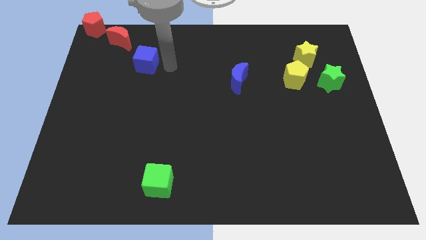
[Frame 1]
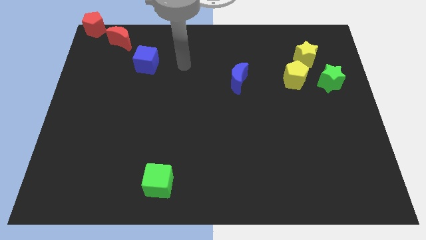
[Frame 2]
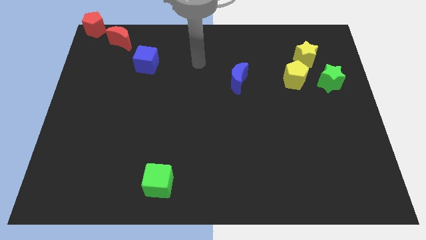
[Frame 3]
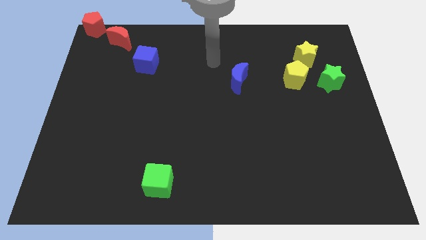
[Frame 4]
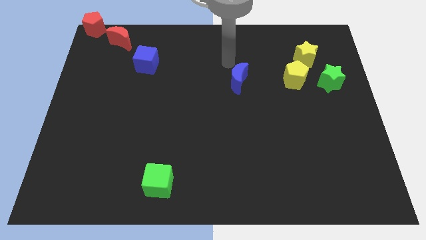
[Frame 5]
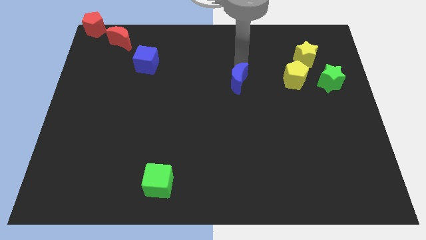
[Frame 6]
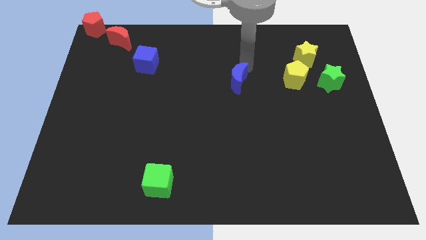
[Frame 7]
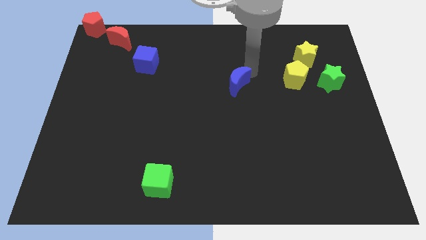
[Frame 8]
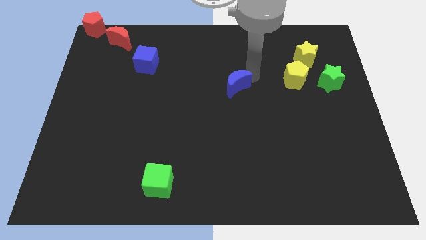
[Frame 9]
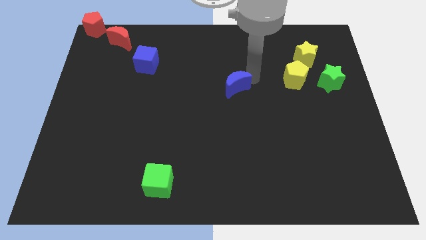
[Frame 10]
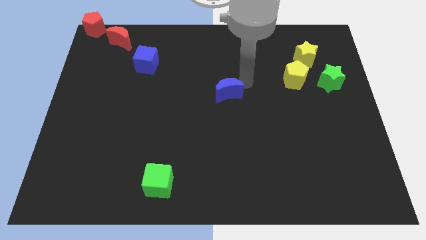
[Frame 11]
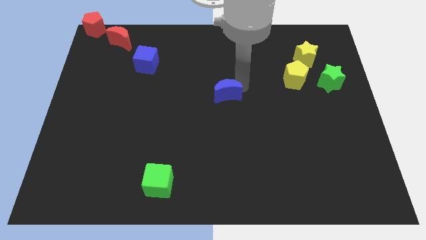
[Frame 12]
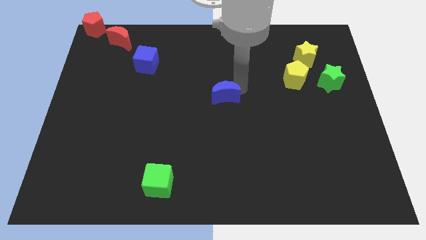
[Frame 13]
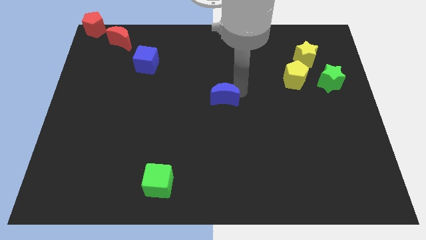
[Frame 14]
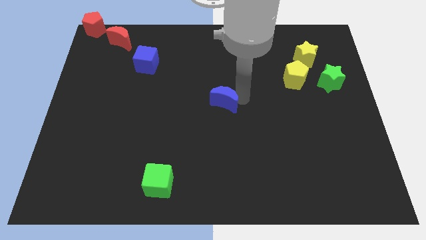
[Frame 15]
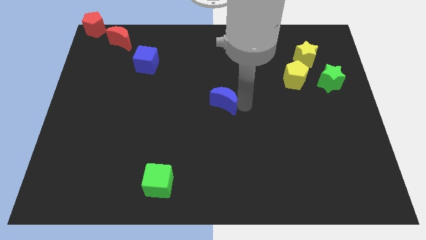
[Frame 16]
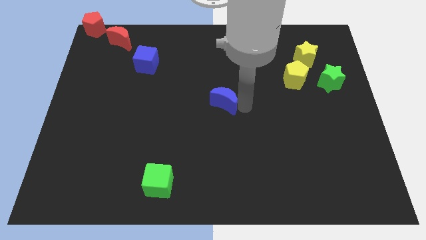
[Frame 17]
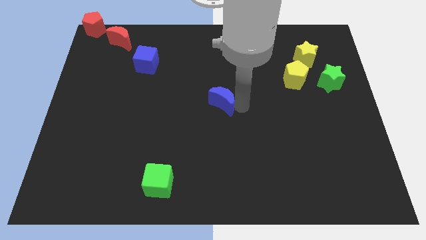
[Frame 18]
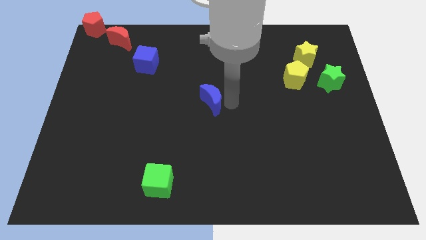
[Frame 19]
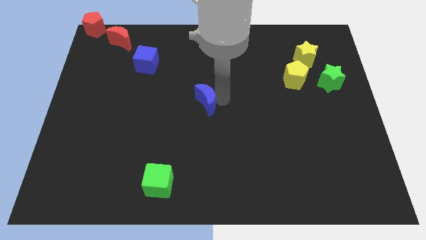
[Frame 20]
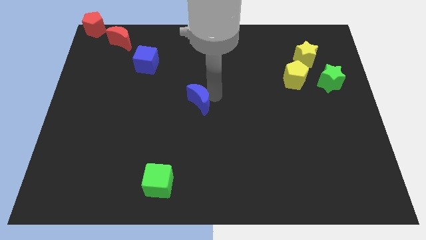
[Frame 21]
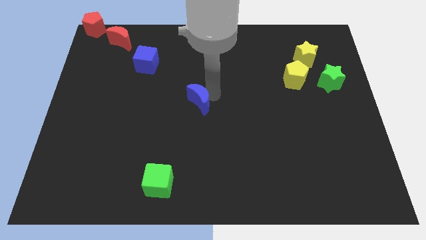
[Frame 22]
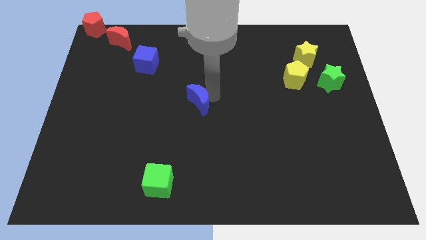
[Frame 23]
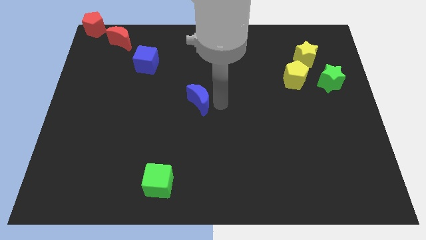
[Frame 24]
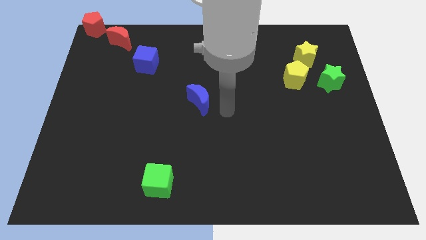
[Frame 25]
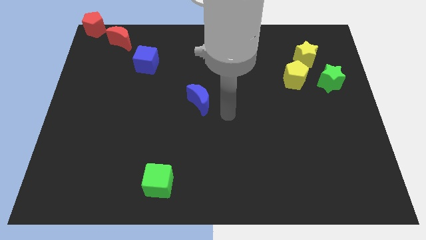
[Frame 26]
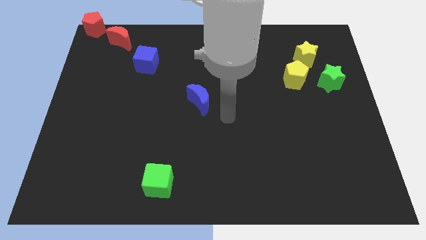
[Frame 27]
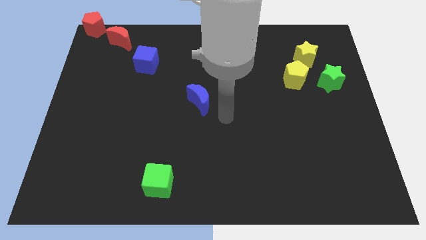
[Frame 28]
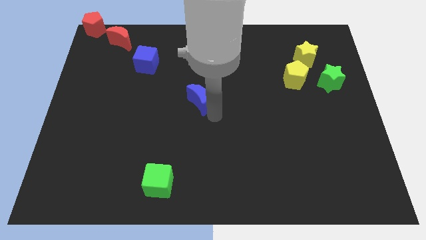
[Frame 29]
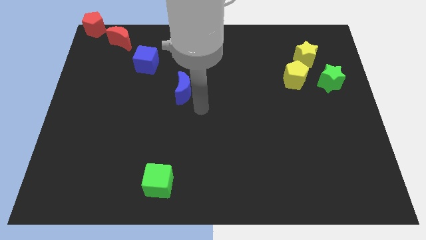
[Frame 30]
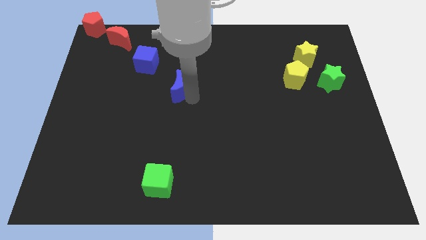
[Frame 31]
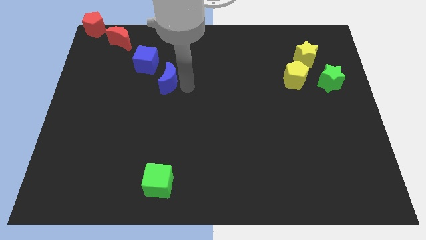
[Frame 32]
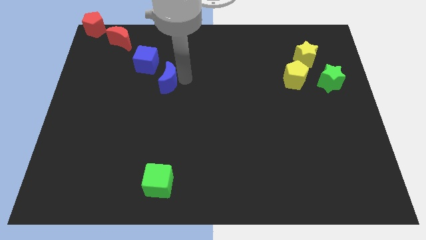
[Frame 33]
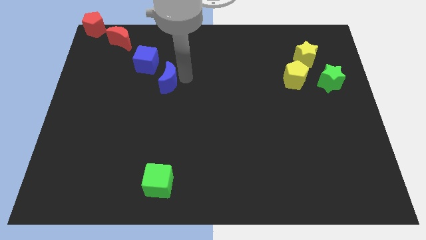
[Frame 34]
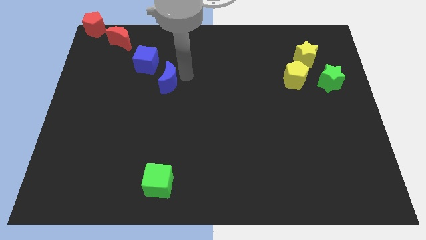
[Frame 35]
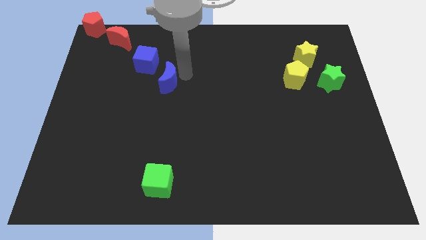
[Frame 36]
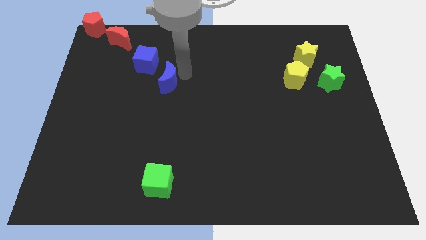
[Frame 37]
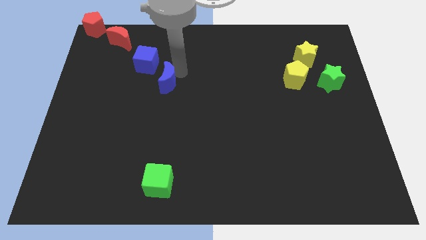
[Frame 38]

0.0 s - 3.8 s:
place the blue moon above the green cube

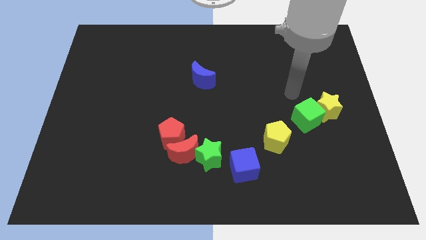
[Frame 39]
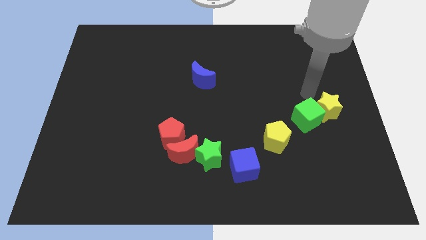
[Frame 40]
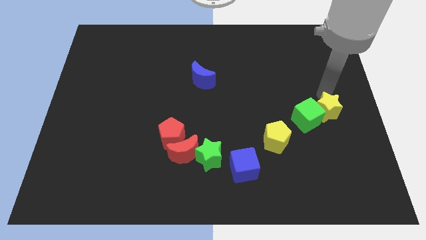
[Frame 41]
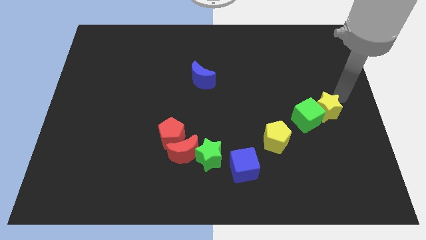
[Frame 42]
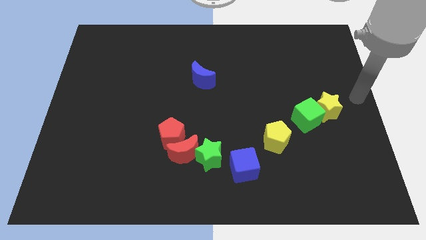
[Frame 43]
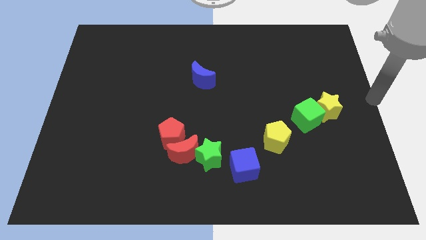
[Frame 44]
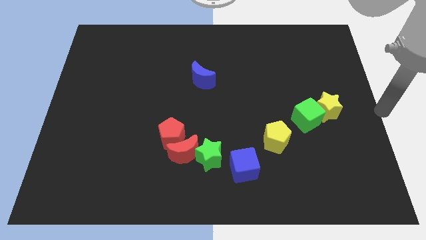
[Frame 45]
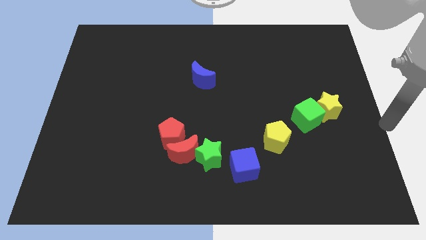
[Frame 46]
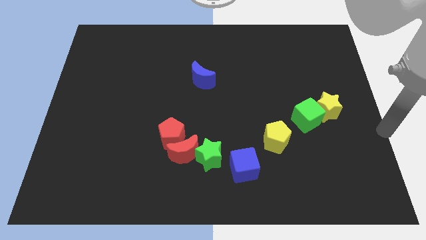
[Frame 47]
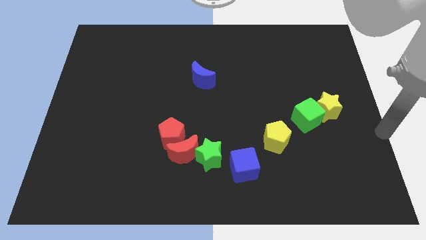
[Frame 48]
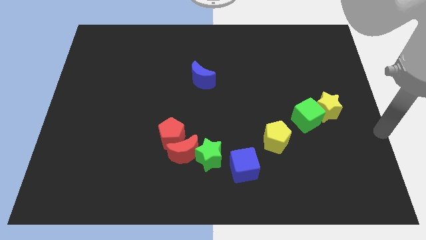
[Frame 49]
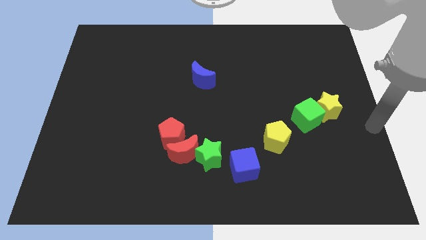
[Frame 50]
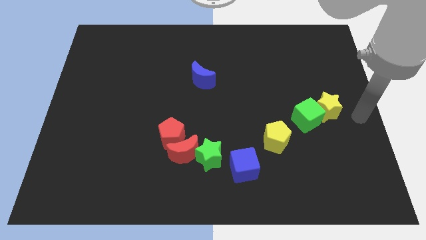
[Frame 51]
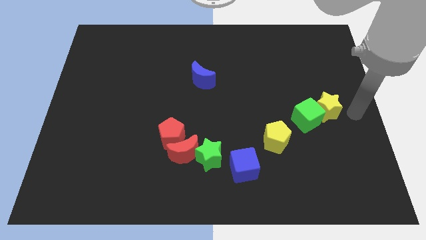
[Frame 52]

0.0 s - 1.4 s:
move your arm to the right of the yellow star

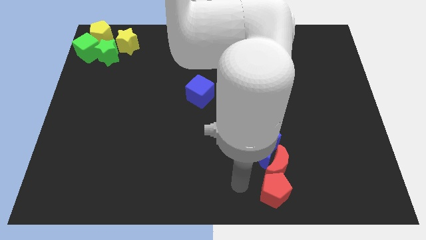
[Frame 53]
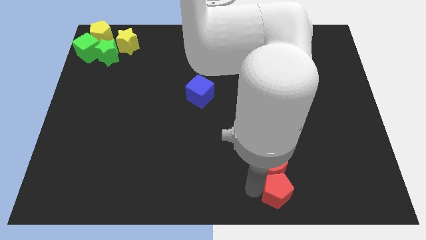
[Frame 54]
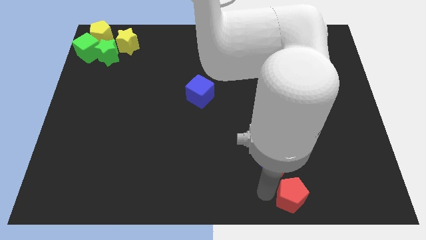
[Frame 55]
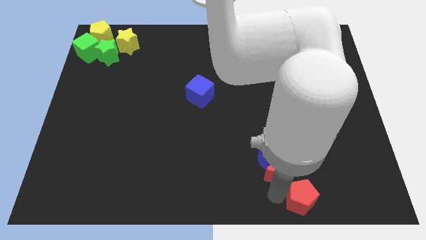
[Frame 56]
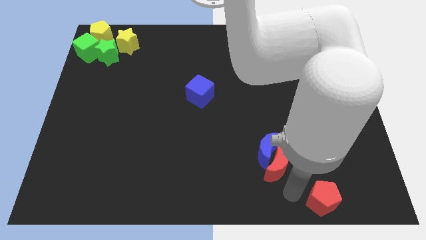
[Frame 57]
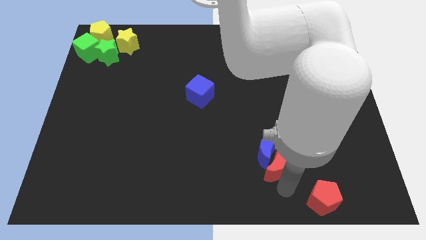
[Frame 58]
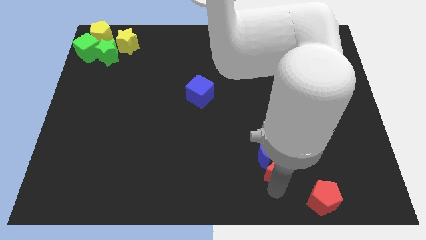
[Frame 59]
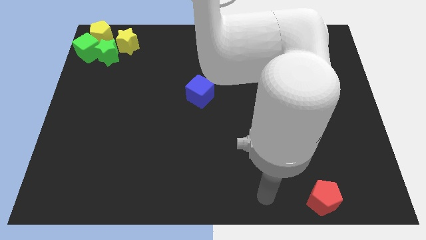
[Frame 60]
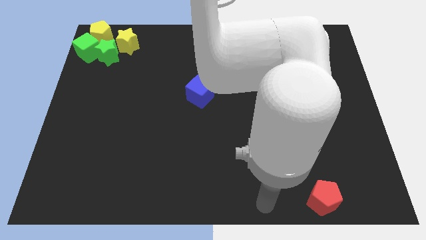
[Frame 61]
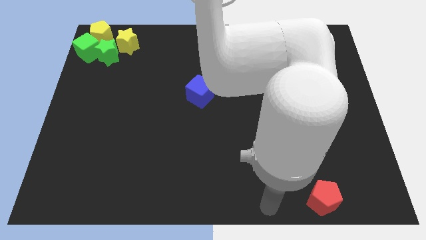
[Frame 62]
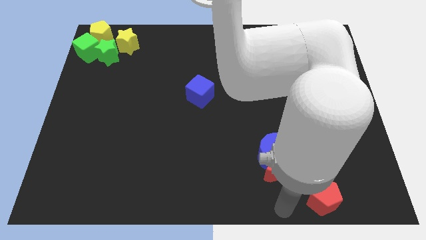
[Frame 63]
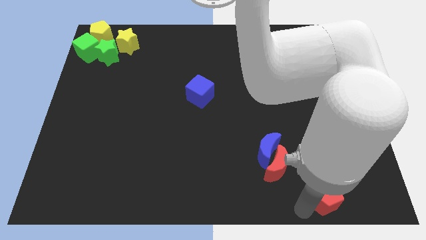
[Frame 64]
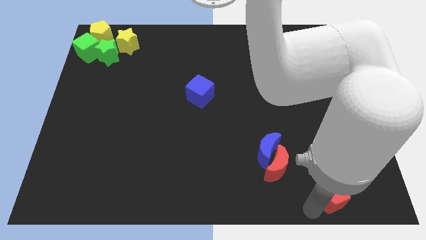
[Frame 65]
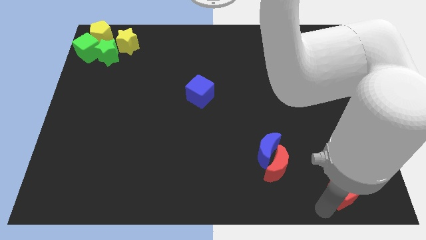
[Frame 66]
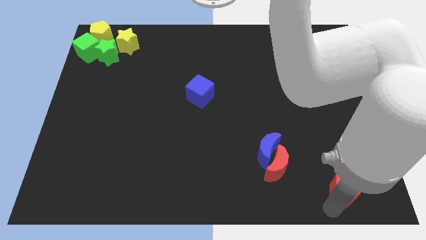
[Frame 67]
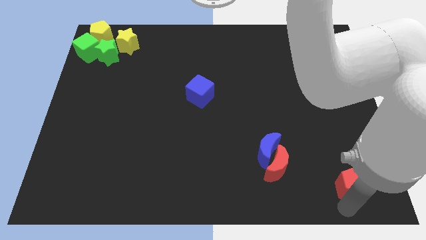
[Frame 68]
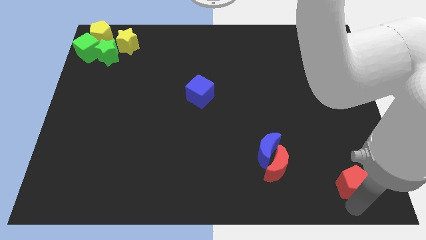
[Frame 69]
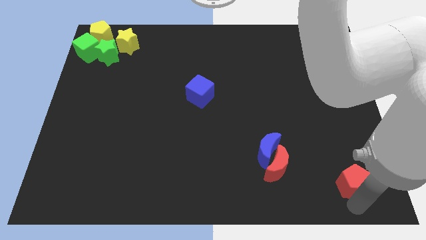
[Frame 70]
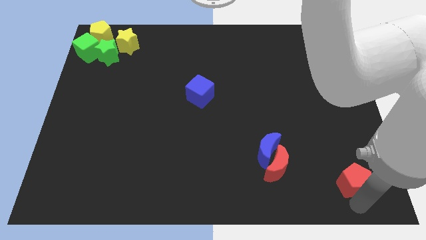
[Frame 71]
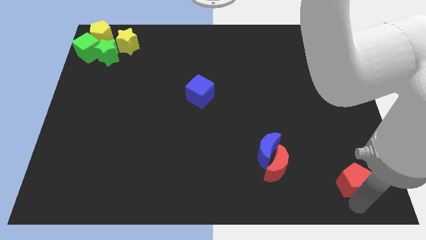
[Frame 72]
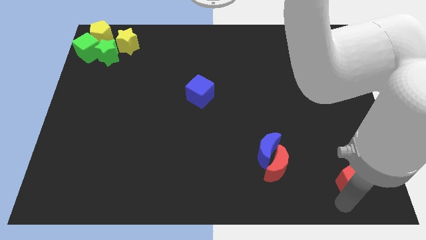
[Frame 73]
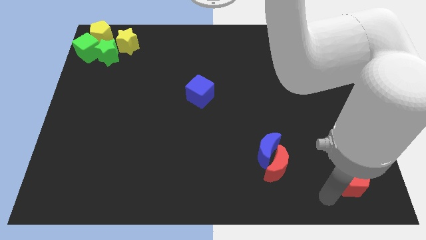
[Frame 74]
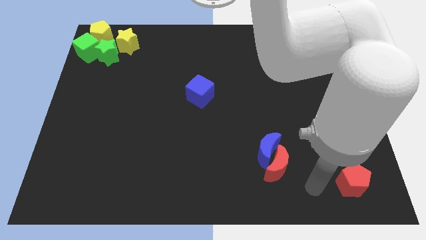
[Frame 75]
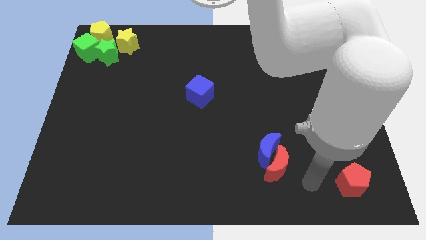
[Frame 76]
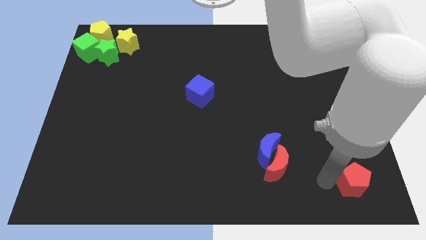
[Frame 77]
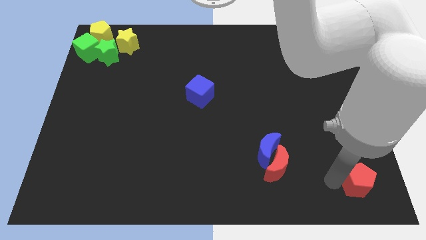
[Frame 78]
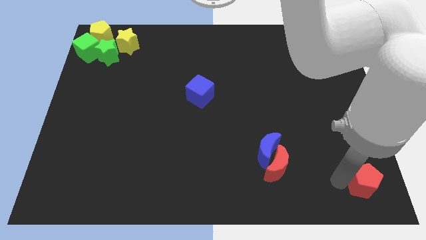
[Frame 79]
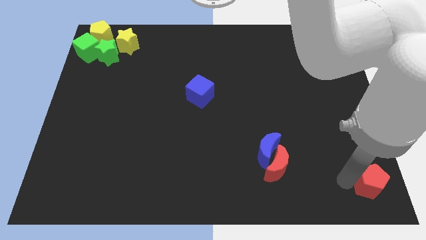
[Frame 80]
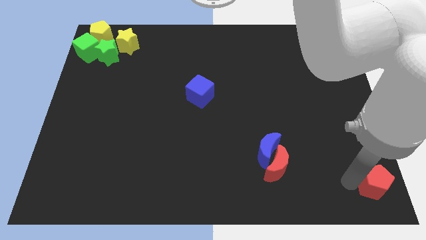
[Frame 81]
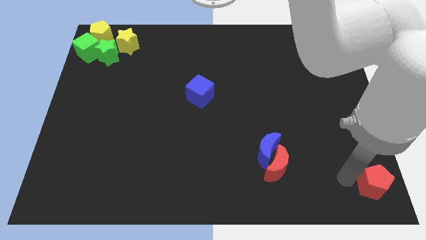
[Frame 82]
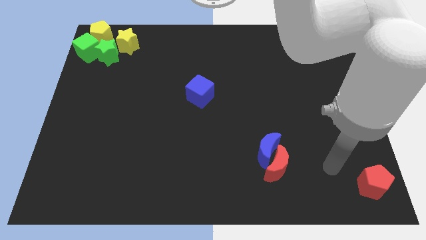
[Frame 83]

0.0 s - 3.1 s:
separate the red pentagon to the bottom right corner side

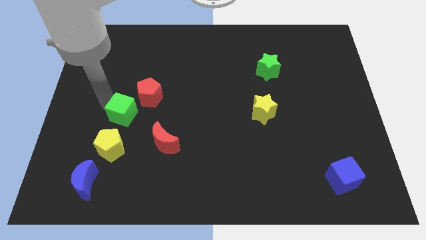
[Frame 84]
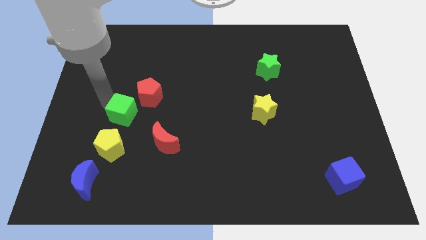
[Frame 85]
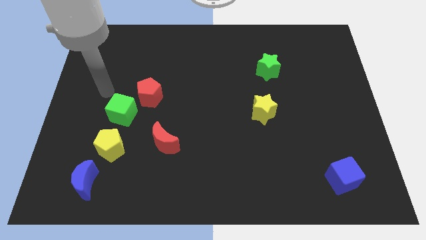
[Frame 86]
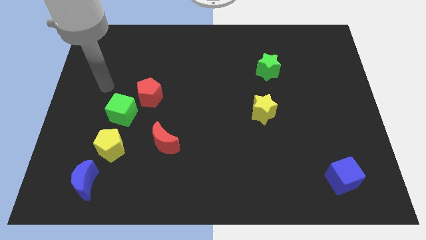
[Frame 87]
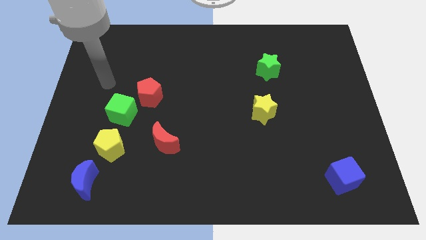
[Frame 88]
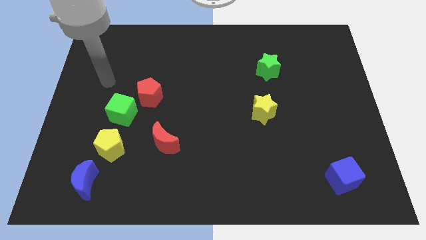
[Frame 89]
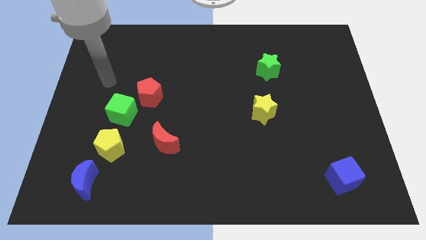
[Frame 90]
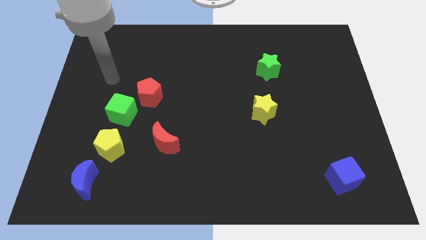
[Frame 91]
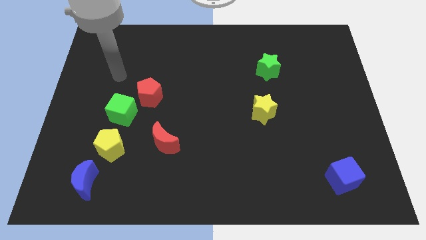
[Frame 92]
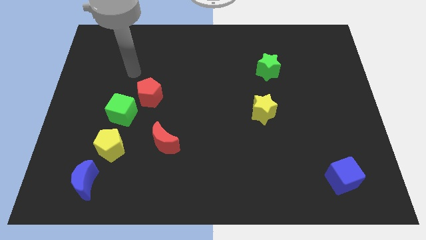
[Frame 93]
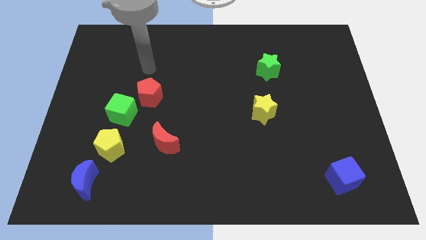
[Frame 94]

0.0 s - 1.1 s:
point your arm at the top of the red pentagon
